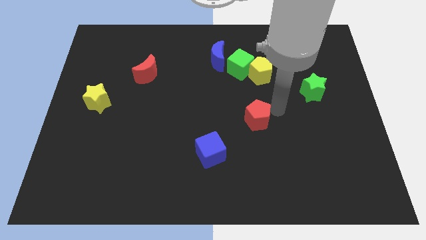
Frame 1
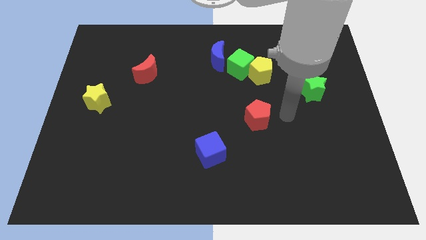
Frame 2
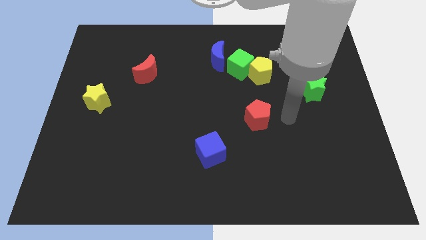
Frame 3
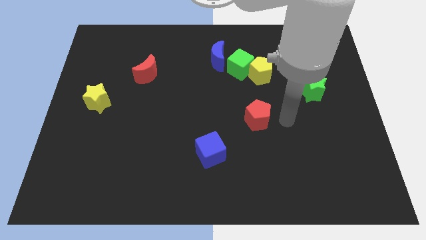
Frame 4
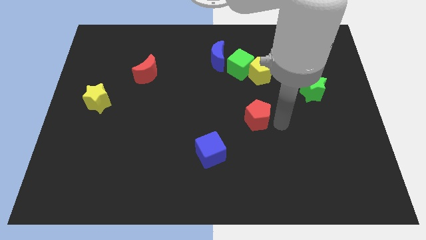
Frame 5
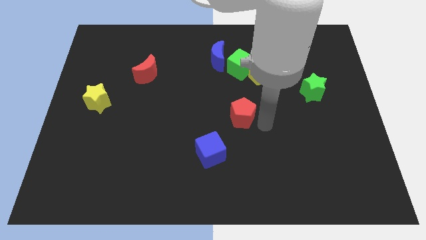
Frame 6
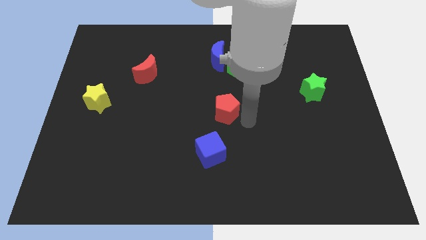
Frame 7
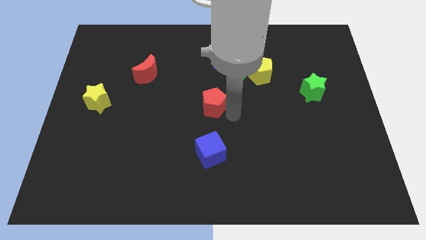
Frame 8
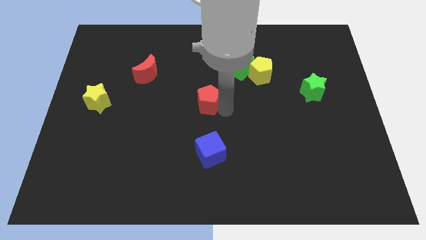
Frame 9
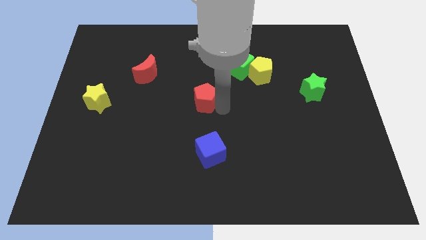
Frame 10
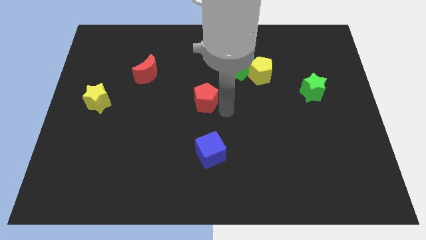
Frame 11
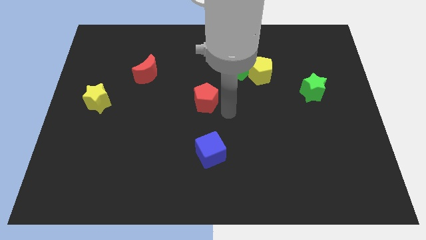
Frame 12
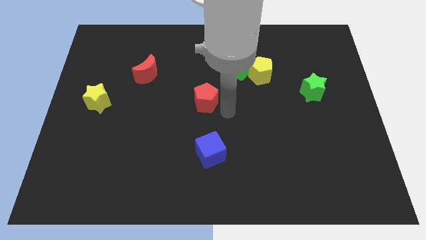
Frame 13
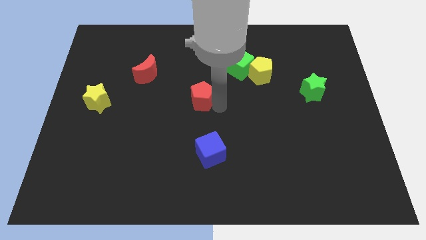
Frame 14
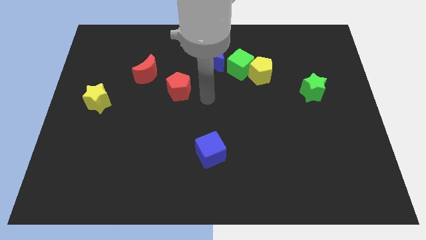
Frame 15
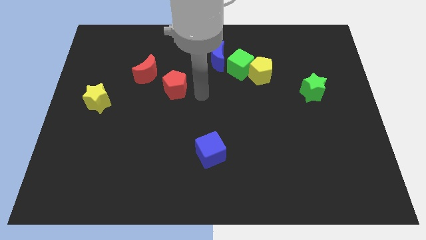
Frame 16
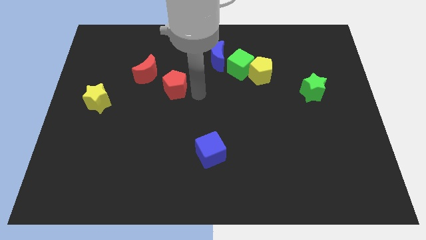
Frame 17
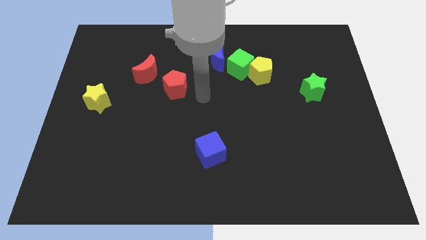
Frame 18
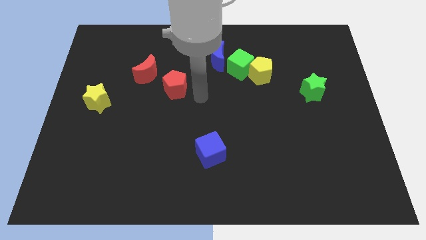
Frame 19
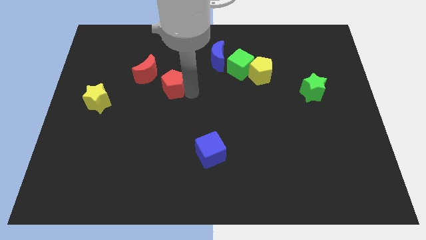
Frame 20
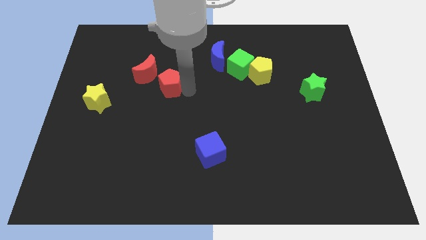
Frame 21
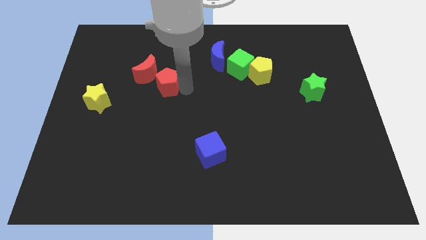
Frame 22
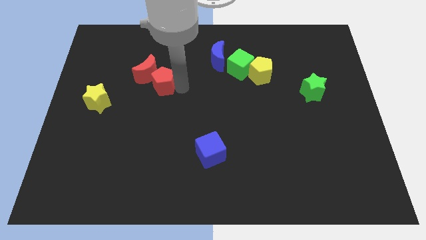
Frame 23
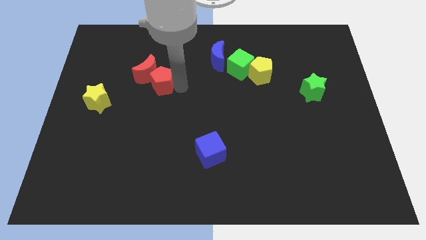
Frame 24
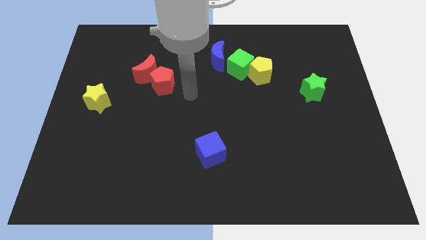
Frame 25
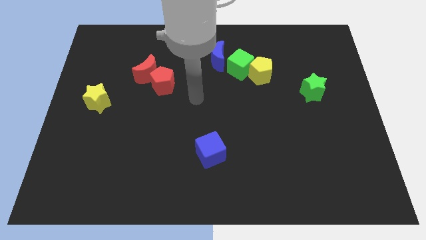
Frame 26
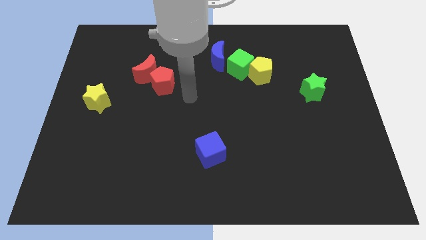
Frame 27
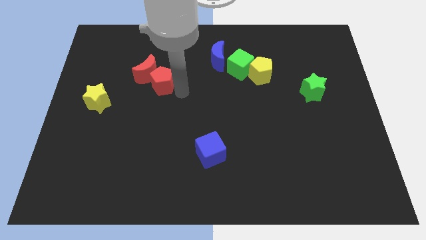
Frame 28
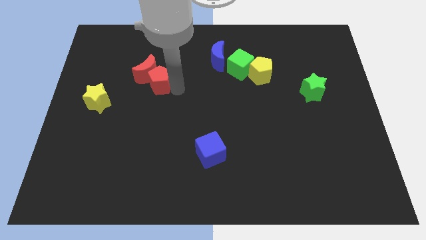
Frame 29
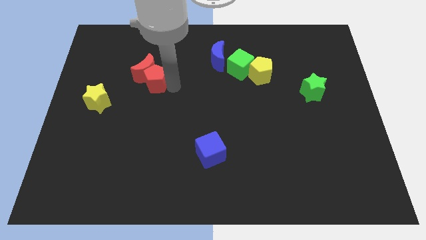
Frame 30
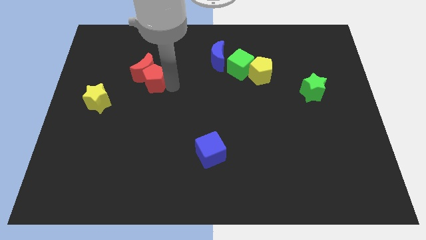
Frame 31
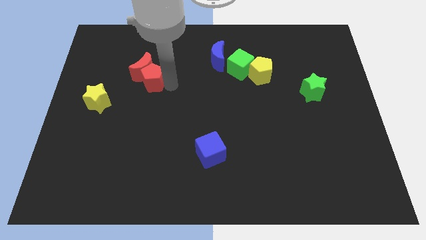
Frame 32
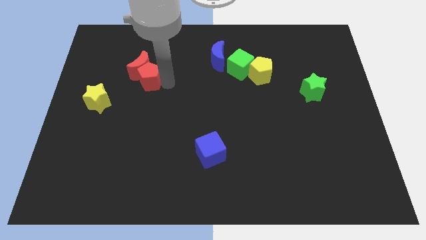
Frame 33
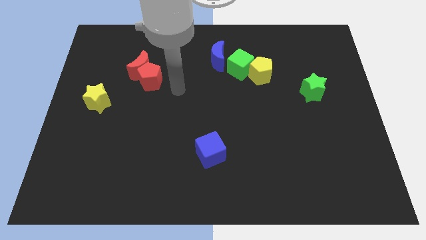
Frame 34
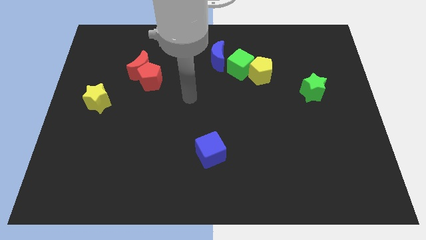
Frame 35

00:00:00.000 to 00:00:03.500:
move the red pentagon into the red crescent

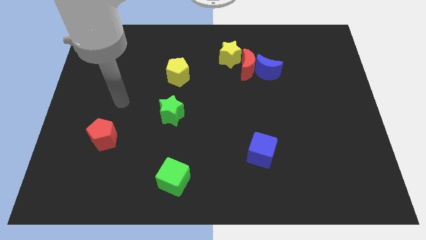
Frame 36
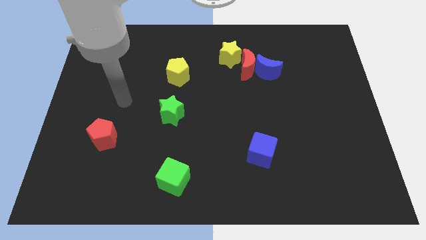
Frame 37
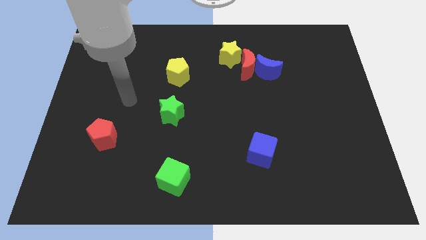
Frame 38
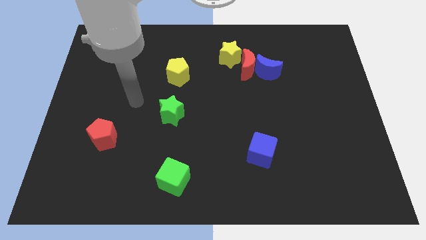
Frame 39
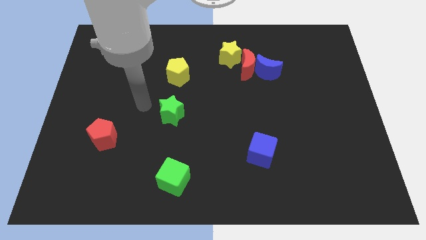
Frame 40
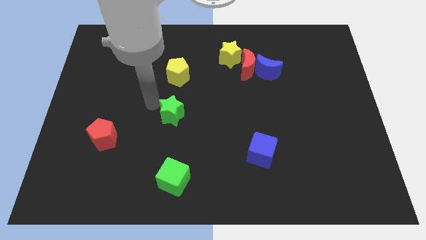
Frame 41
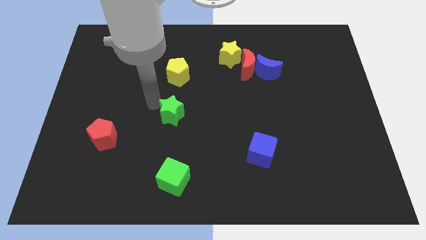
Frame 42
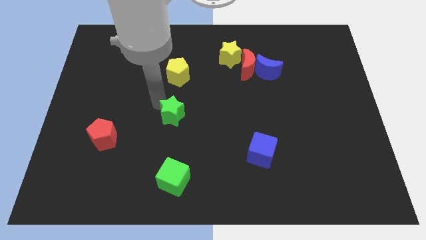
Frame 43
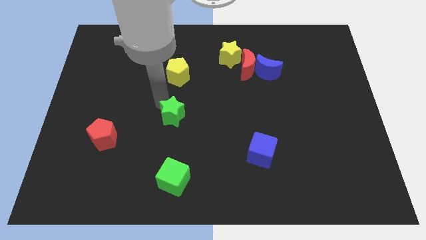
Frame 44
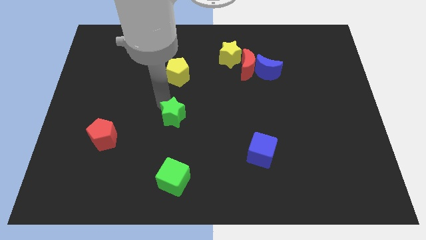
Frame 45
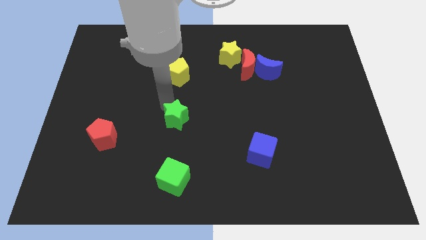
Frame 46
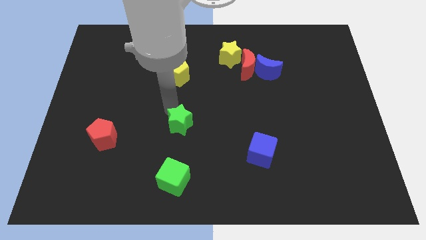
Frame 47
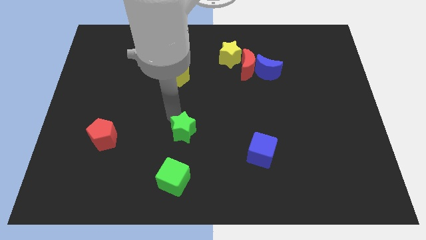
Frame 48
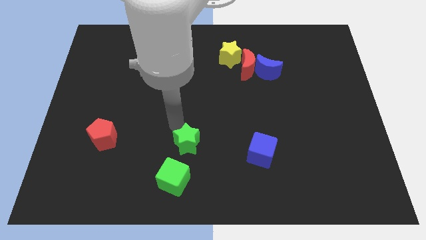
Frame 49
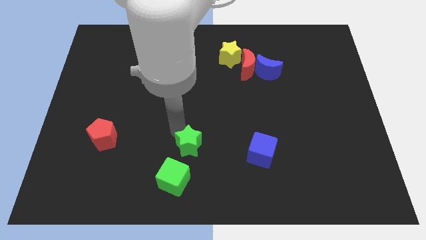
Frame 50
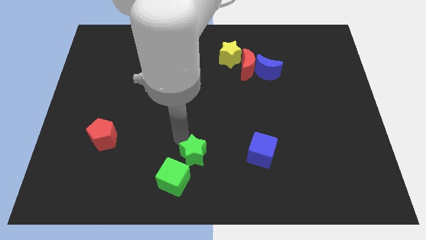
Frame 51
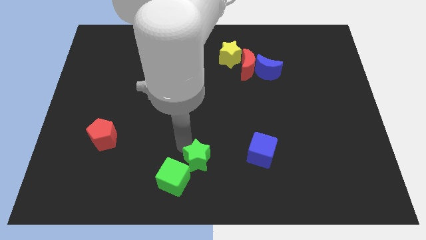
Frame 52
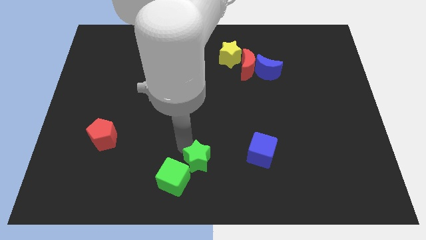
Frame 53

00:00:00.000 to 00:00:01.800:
push the green star to the top right of the green cube

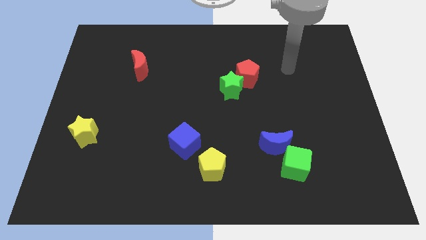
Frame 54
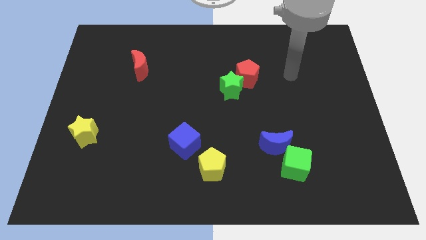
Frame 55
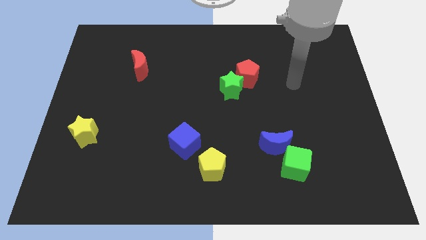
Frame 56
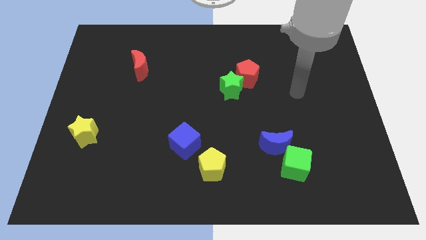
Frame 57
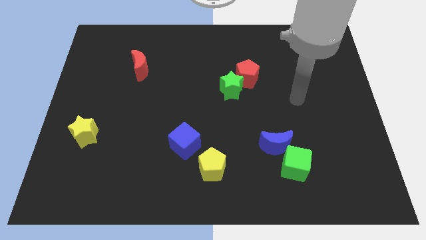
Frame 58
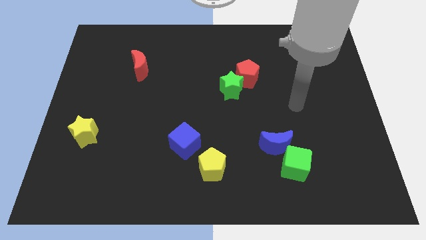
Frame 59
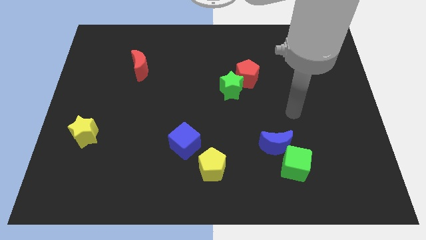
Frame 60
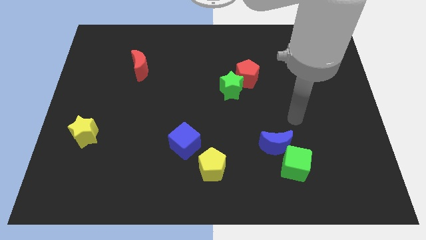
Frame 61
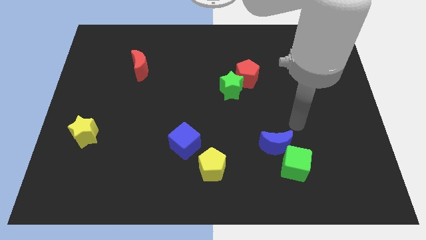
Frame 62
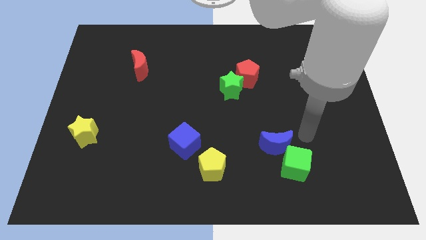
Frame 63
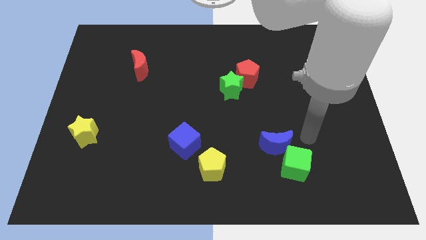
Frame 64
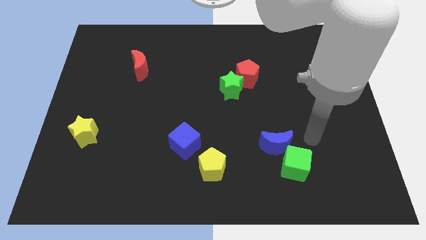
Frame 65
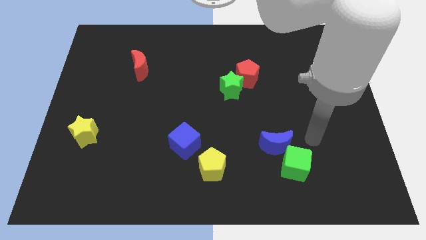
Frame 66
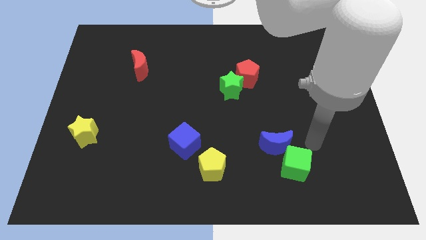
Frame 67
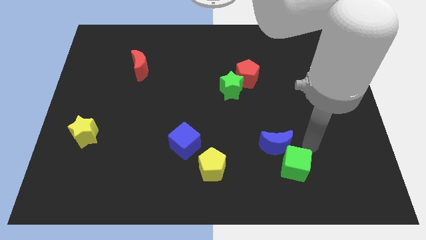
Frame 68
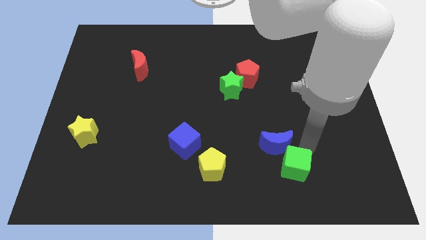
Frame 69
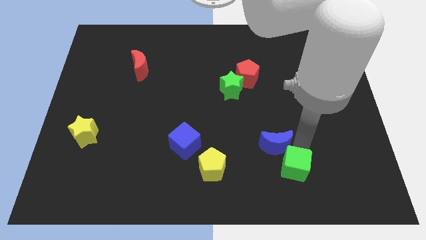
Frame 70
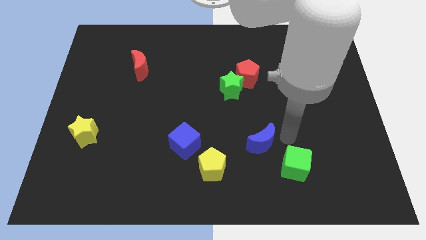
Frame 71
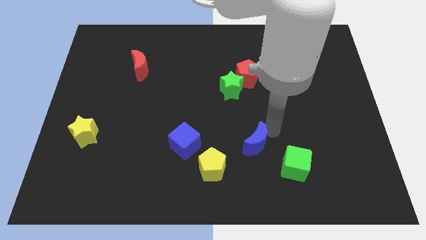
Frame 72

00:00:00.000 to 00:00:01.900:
turn the blue moon to the left side

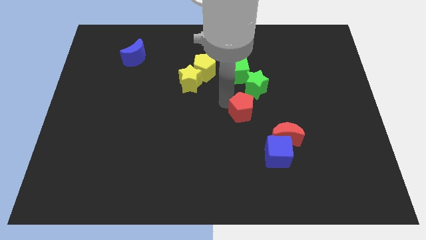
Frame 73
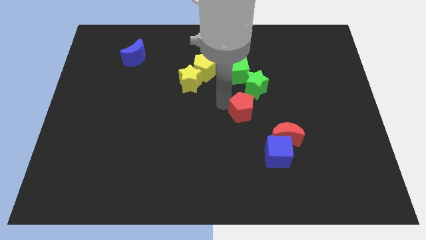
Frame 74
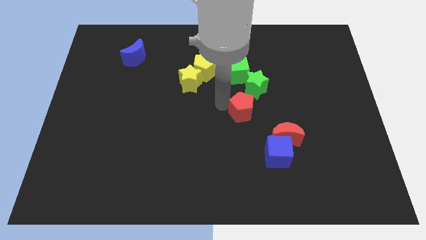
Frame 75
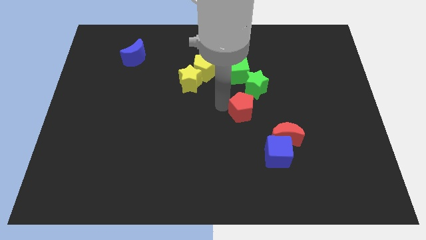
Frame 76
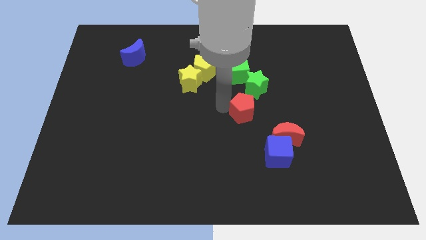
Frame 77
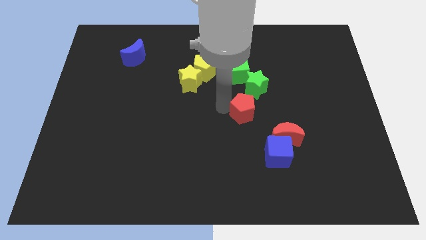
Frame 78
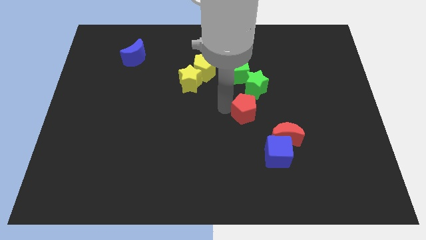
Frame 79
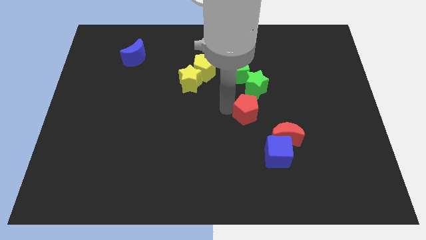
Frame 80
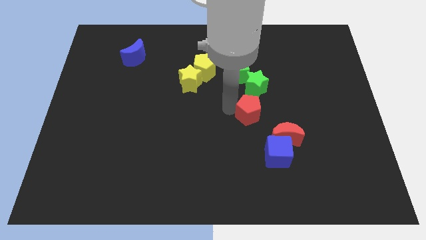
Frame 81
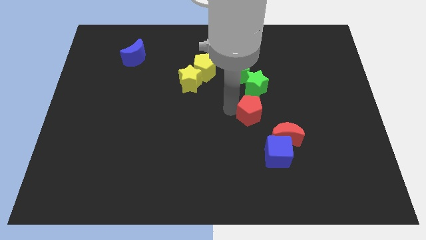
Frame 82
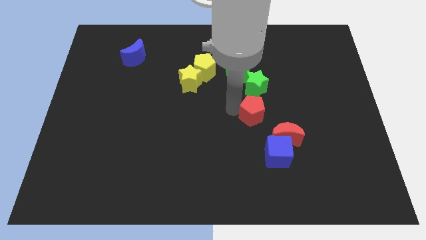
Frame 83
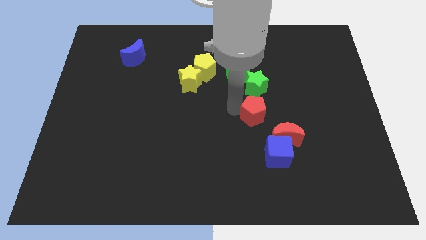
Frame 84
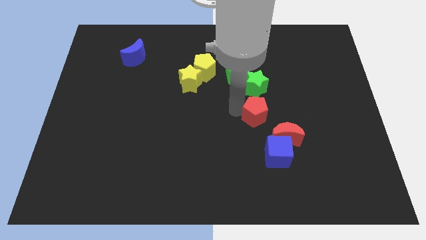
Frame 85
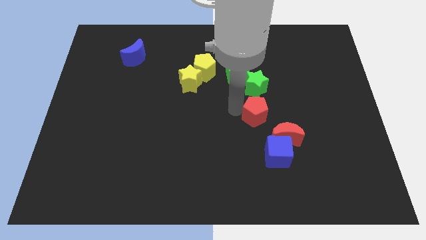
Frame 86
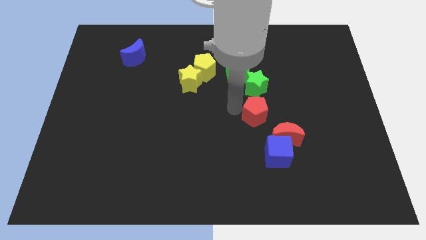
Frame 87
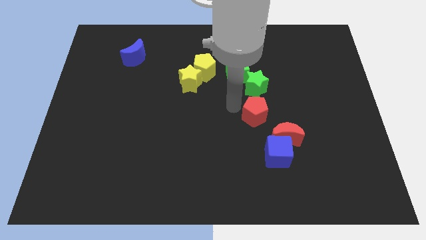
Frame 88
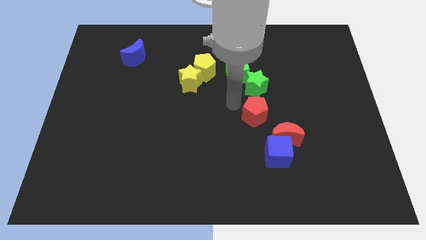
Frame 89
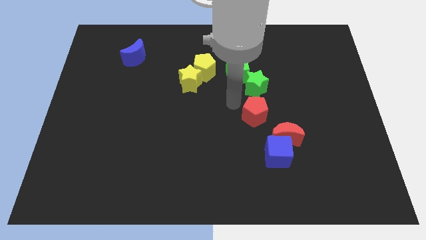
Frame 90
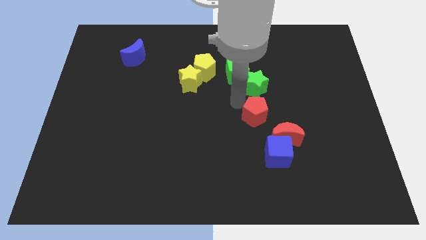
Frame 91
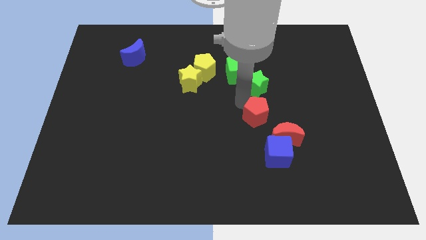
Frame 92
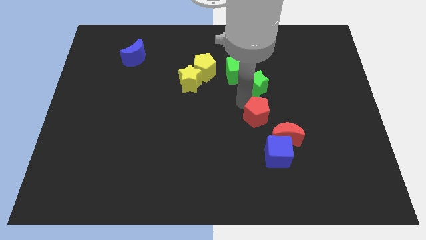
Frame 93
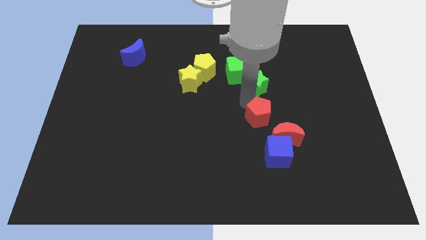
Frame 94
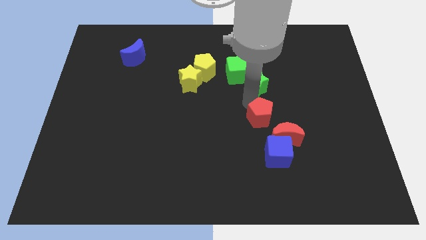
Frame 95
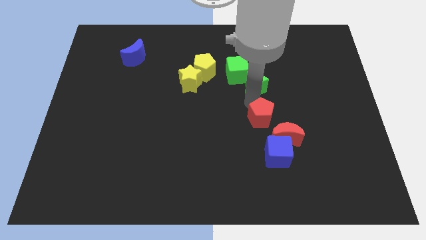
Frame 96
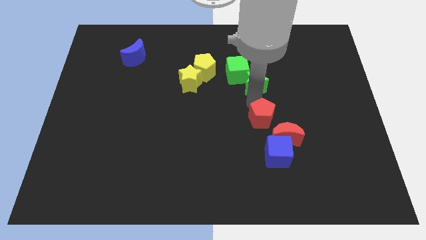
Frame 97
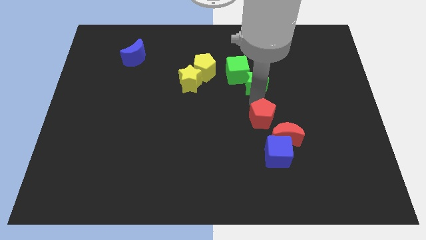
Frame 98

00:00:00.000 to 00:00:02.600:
move the red pentagon towards the red crescent
